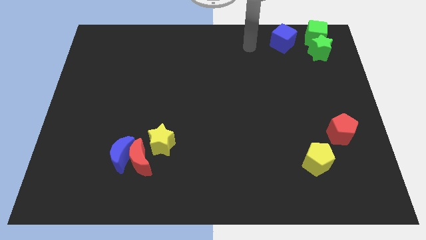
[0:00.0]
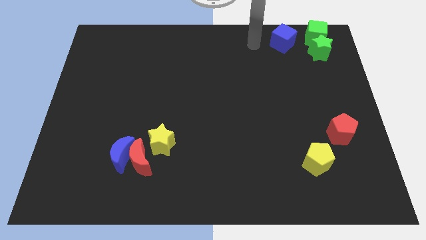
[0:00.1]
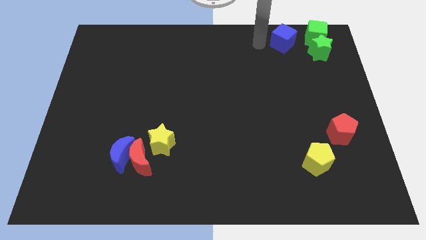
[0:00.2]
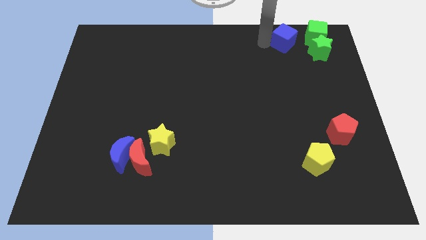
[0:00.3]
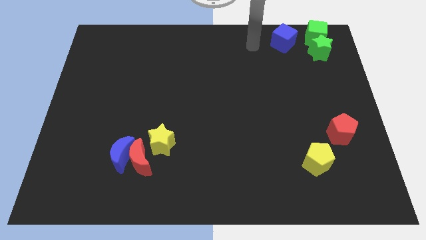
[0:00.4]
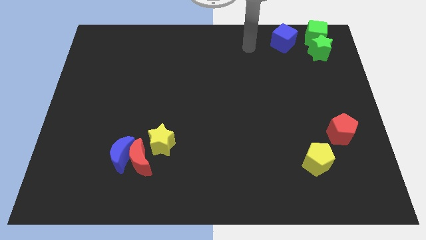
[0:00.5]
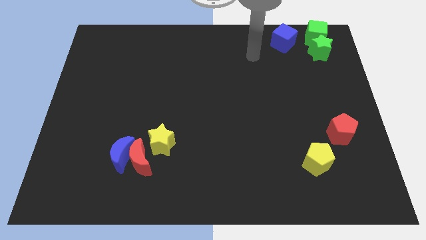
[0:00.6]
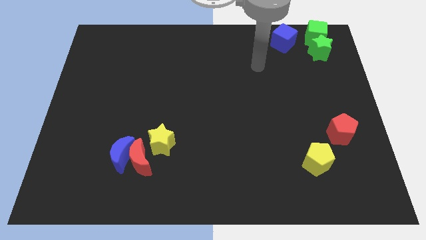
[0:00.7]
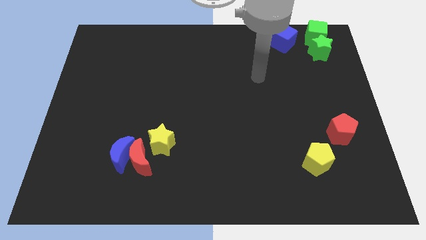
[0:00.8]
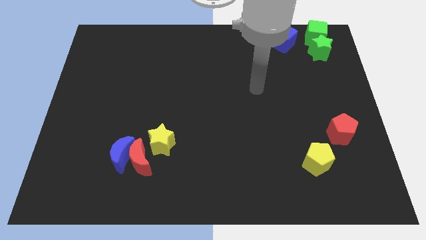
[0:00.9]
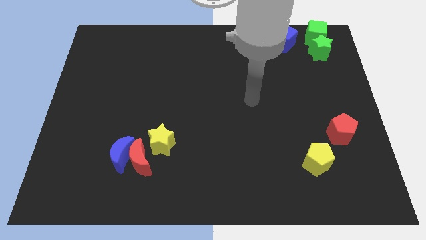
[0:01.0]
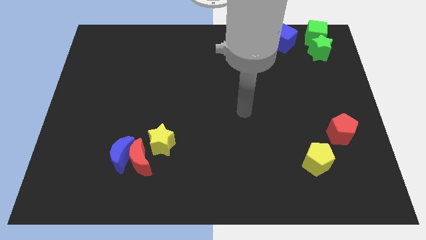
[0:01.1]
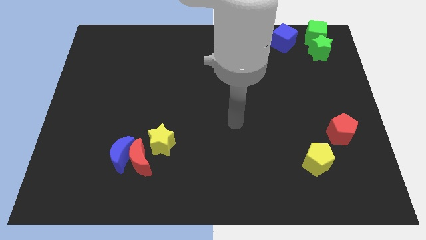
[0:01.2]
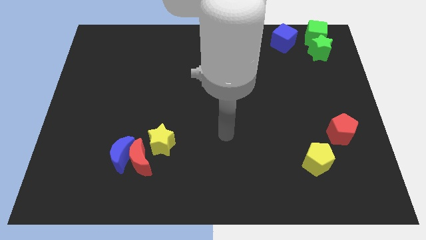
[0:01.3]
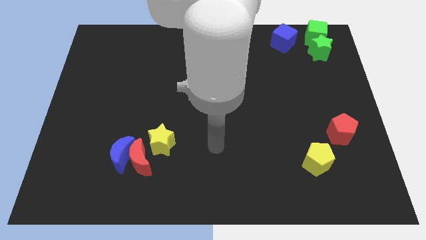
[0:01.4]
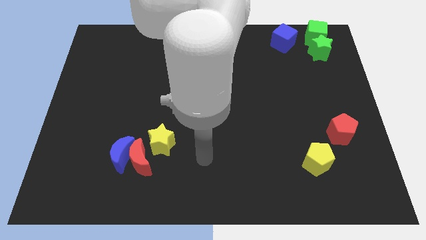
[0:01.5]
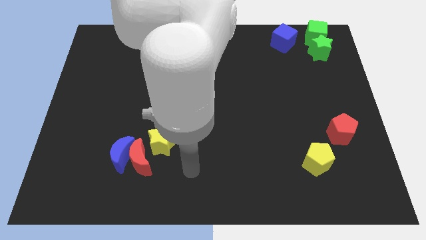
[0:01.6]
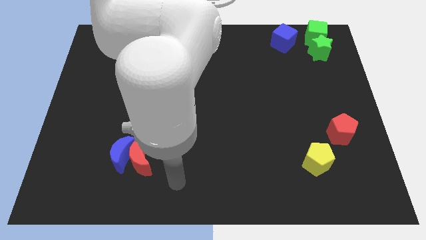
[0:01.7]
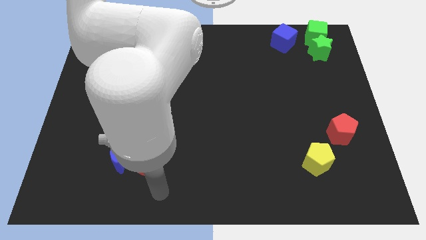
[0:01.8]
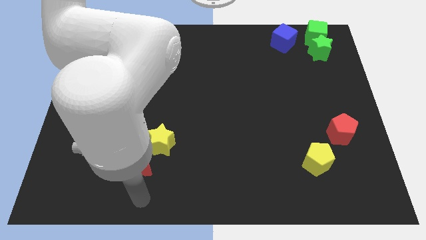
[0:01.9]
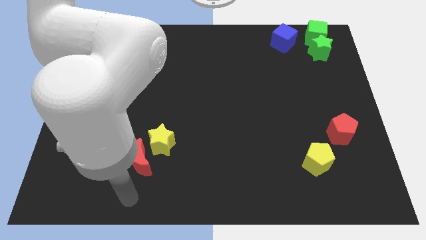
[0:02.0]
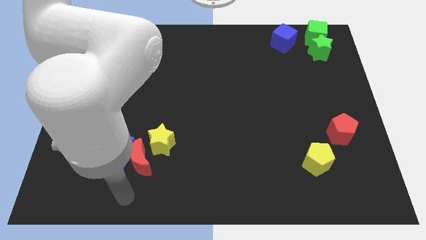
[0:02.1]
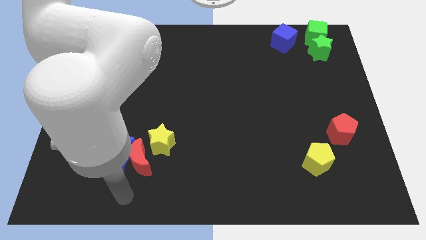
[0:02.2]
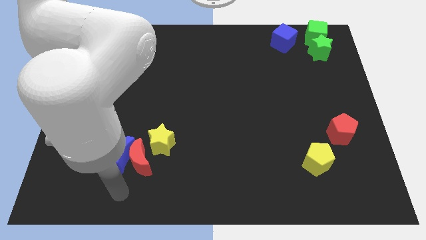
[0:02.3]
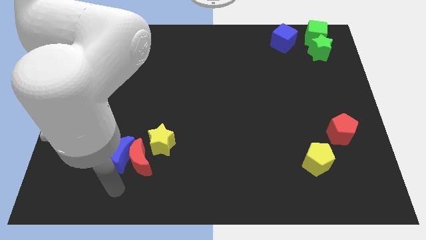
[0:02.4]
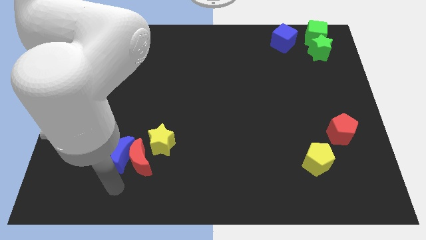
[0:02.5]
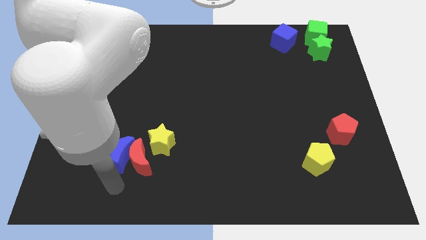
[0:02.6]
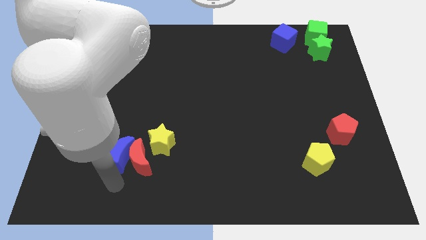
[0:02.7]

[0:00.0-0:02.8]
move your arm towards the blue moon

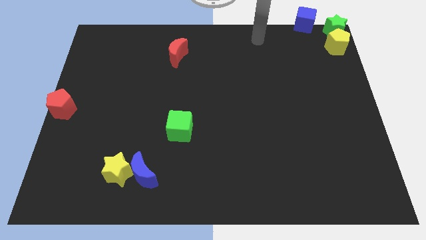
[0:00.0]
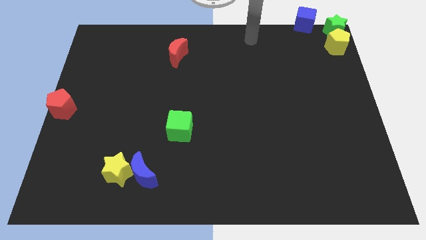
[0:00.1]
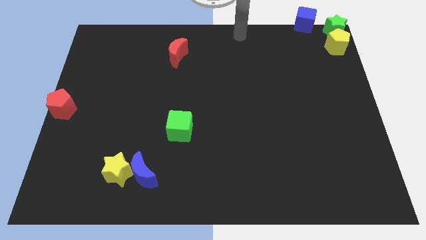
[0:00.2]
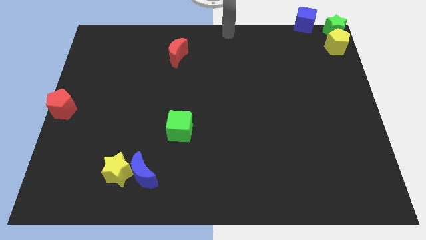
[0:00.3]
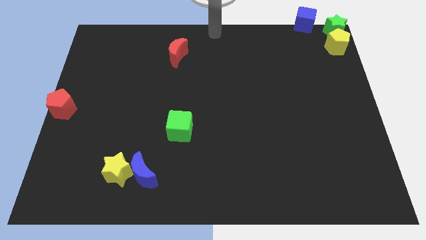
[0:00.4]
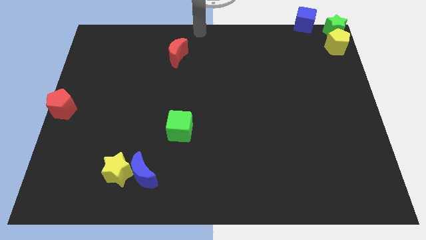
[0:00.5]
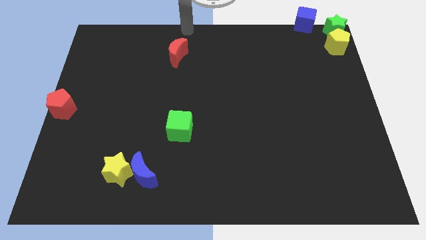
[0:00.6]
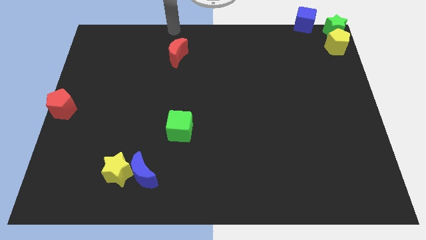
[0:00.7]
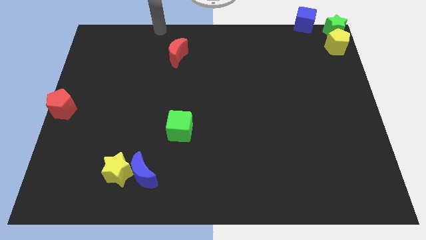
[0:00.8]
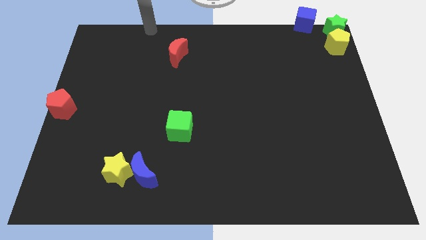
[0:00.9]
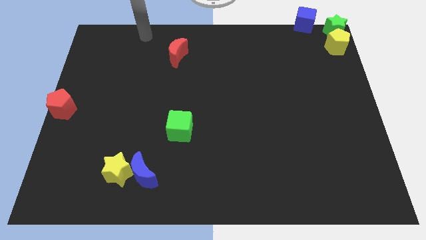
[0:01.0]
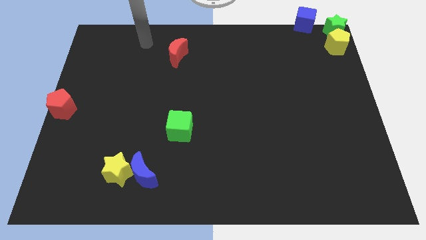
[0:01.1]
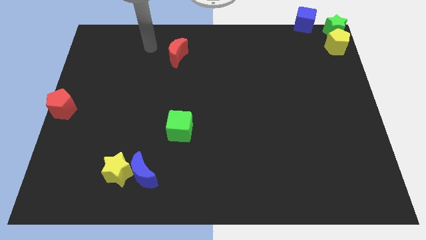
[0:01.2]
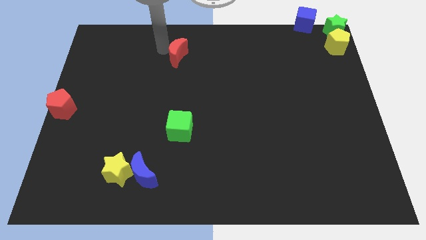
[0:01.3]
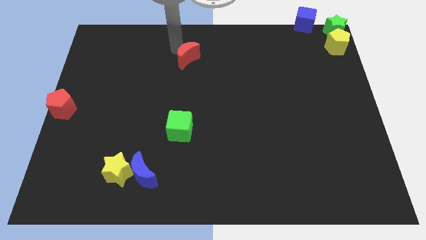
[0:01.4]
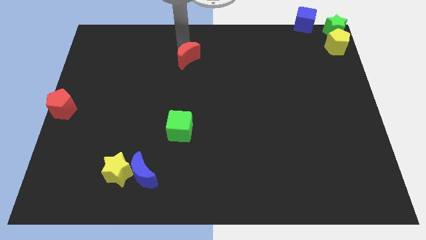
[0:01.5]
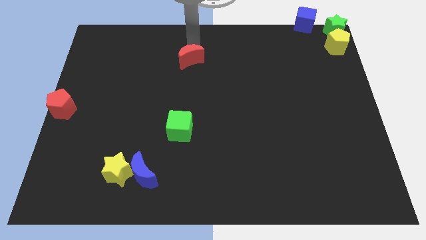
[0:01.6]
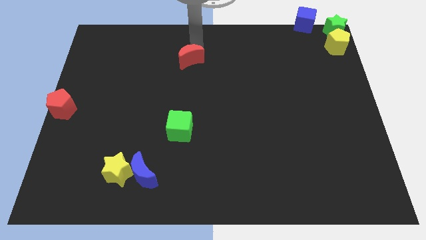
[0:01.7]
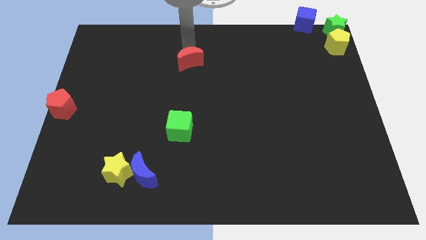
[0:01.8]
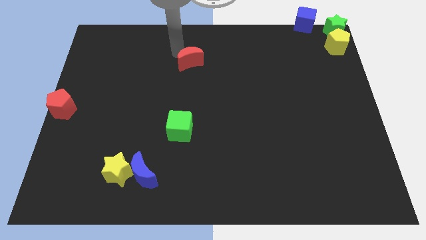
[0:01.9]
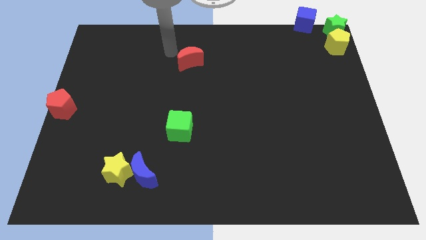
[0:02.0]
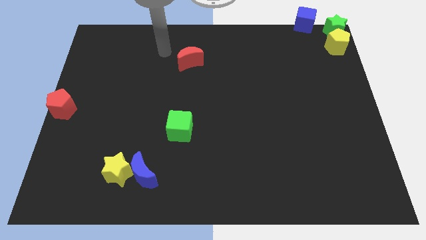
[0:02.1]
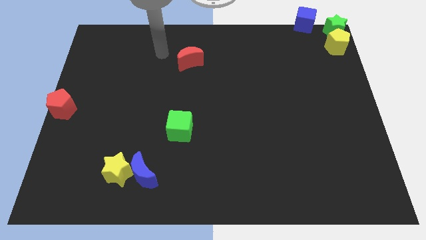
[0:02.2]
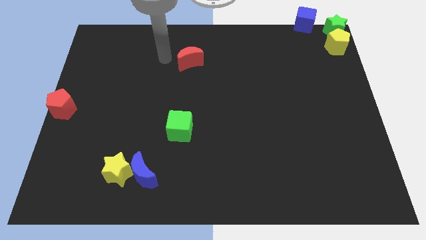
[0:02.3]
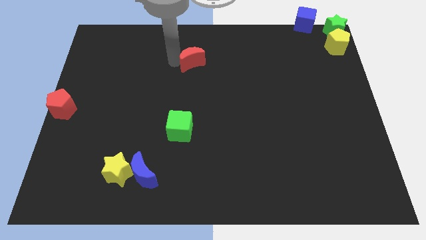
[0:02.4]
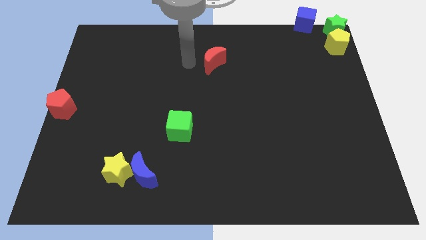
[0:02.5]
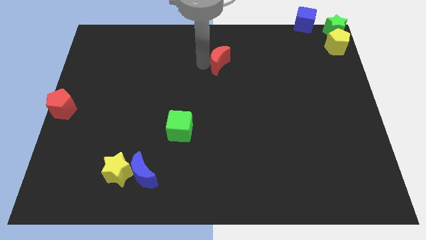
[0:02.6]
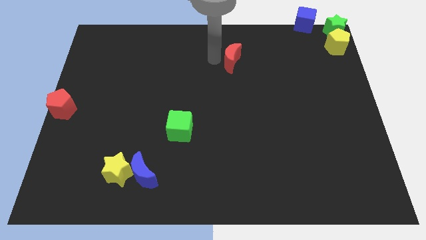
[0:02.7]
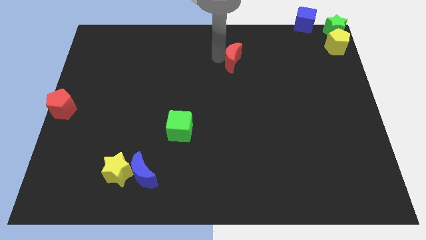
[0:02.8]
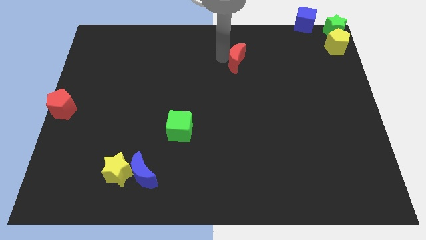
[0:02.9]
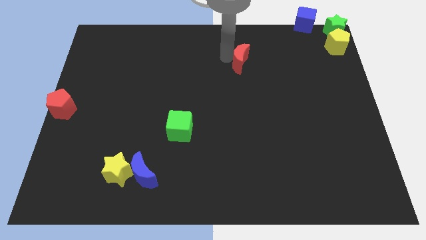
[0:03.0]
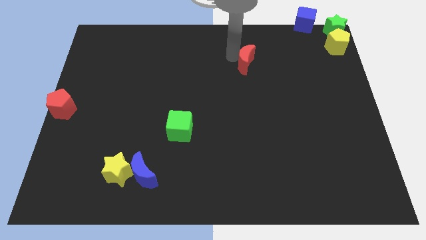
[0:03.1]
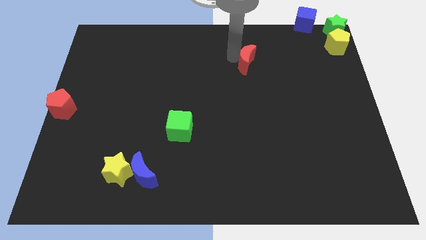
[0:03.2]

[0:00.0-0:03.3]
move the red moon towards the yellow pentagon

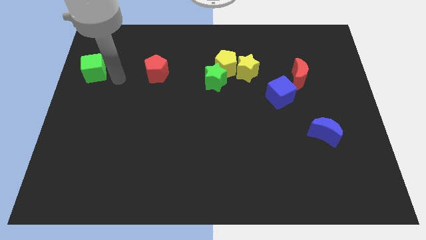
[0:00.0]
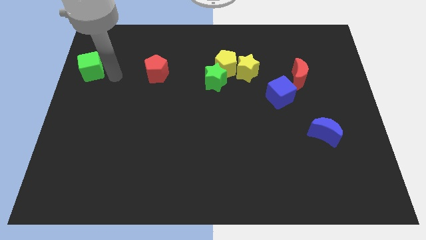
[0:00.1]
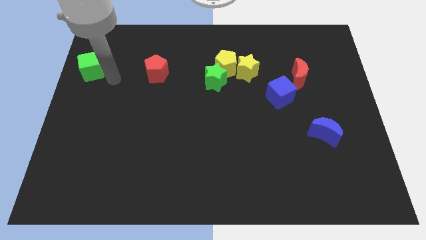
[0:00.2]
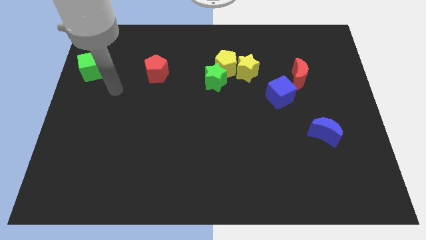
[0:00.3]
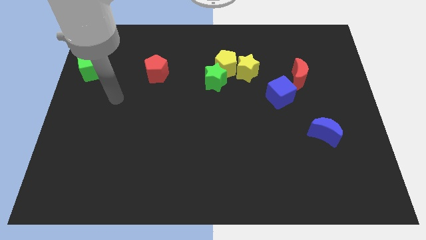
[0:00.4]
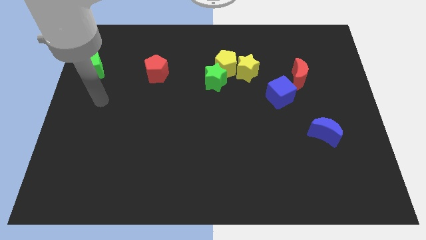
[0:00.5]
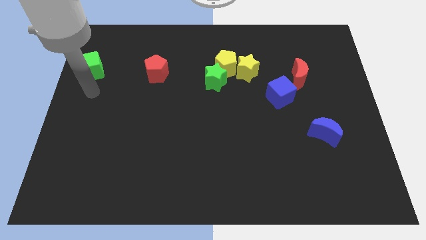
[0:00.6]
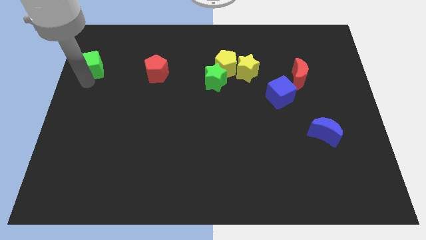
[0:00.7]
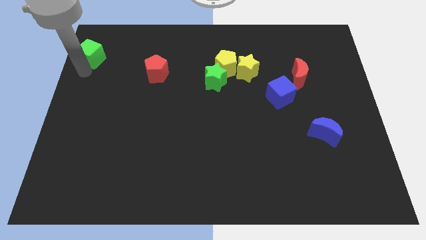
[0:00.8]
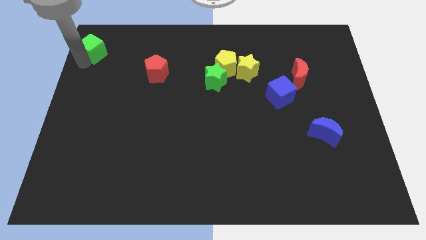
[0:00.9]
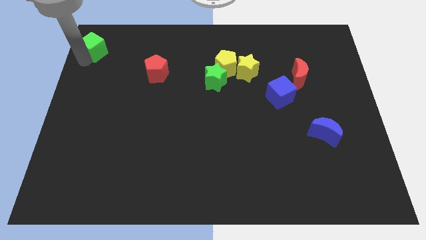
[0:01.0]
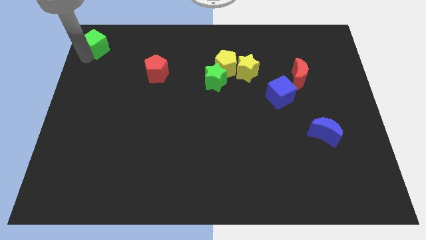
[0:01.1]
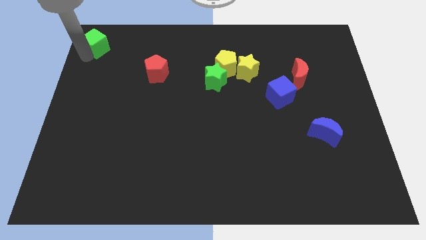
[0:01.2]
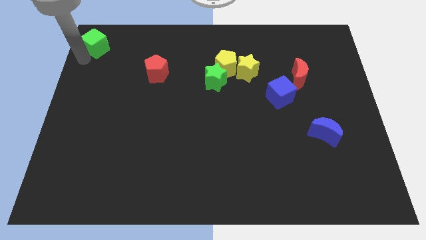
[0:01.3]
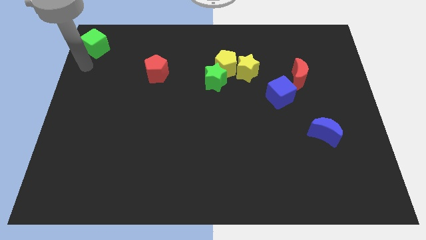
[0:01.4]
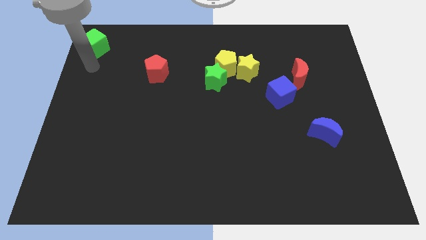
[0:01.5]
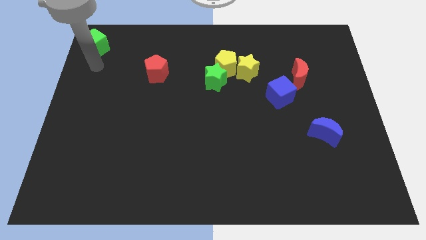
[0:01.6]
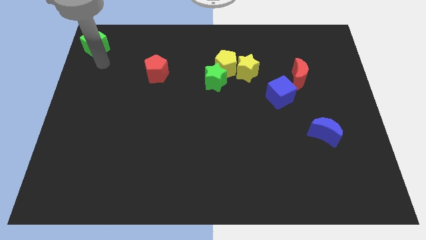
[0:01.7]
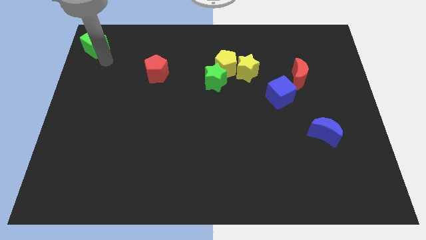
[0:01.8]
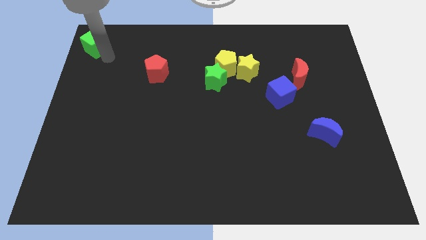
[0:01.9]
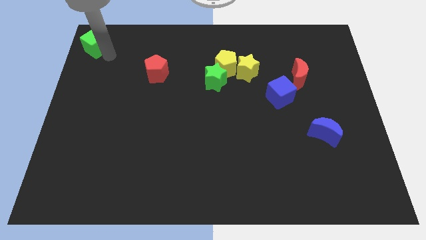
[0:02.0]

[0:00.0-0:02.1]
push green cube towards top left corner of the board

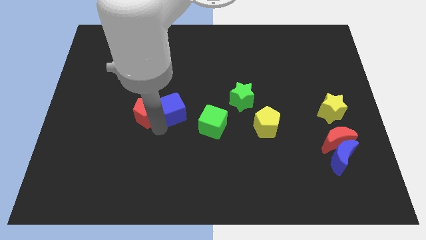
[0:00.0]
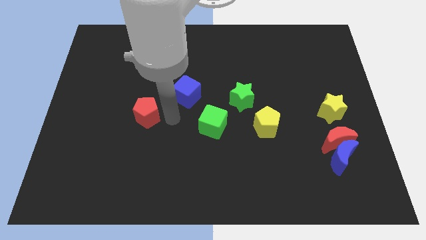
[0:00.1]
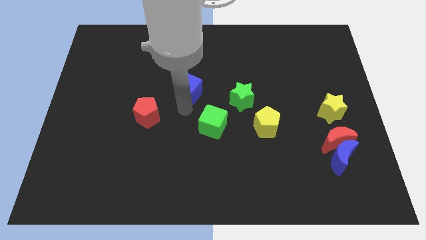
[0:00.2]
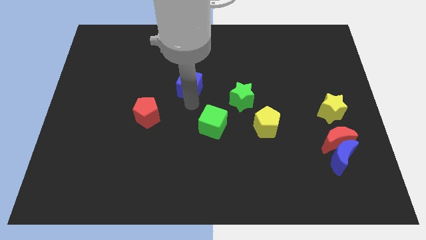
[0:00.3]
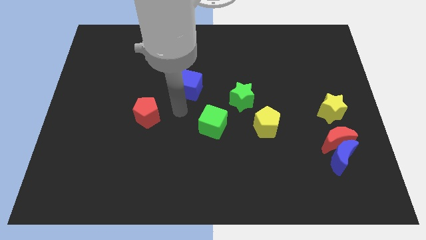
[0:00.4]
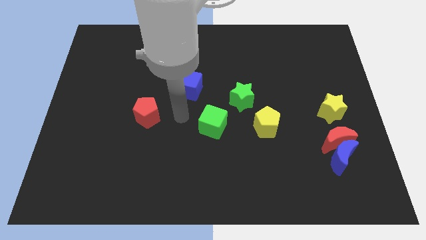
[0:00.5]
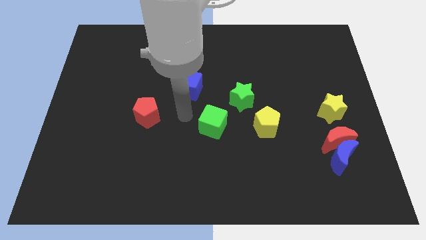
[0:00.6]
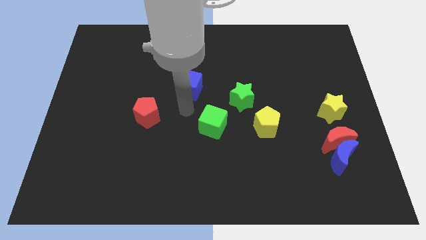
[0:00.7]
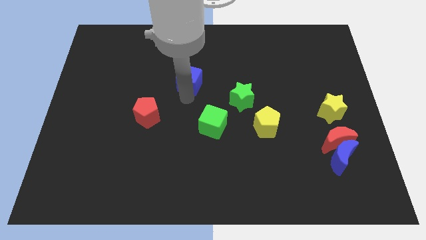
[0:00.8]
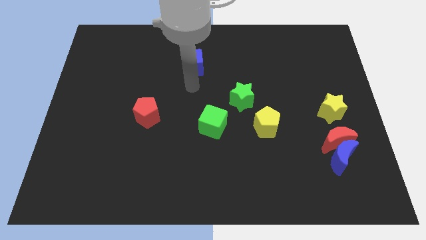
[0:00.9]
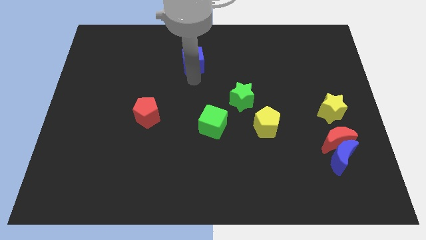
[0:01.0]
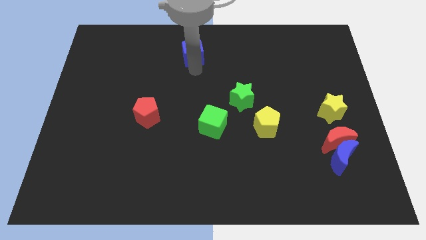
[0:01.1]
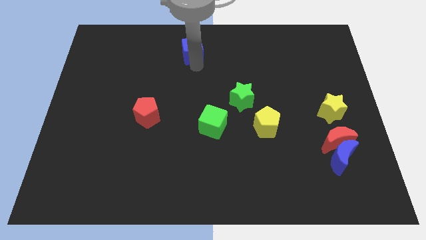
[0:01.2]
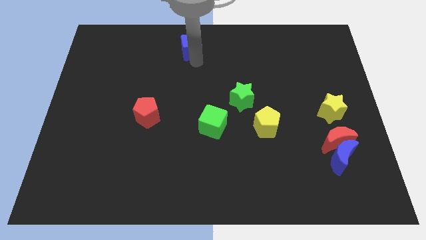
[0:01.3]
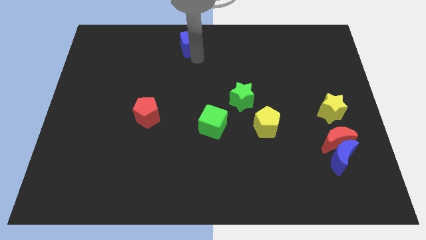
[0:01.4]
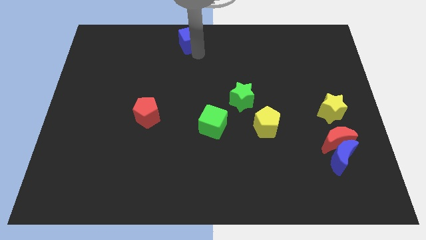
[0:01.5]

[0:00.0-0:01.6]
move the blue cube towards the top center of the board
